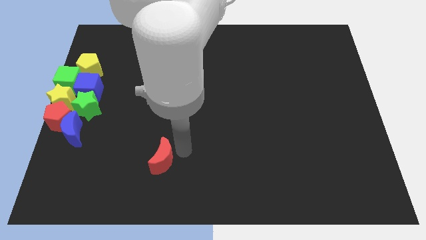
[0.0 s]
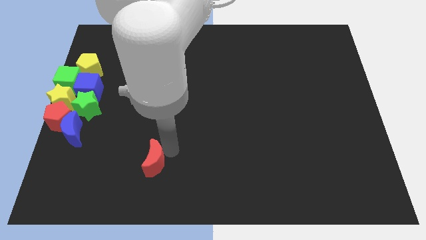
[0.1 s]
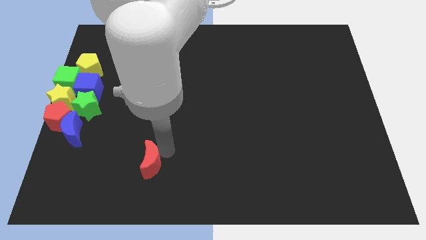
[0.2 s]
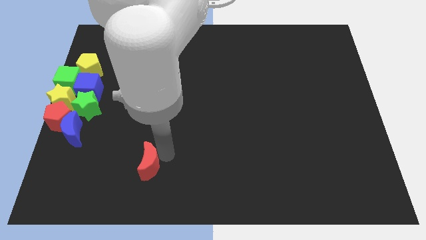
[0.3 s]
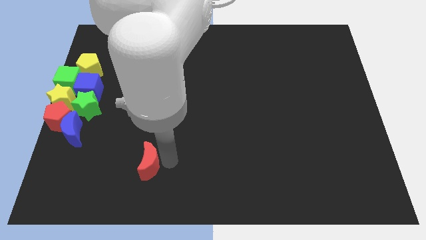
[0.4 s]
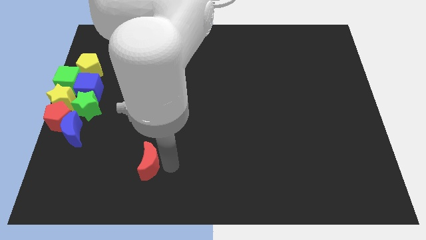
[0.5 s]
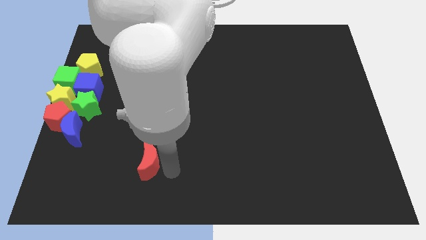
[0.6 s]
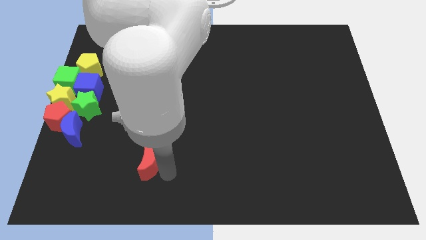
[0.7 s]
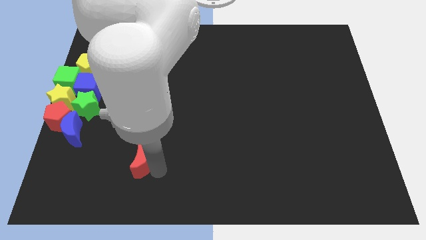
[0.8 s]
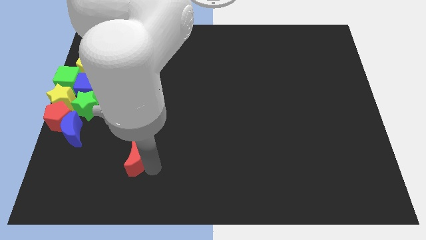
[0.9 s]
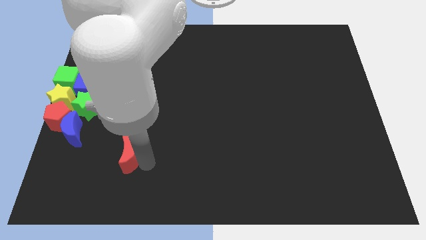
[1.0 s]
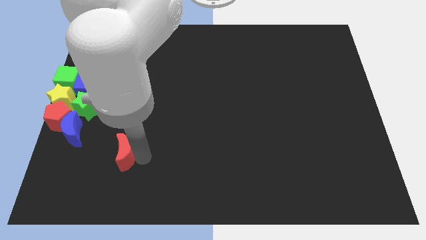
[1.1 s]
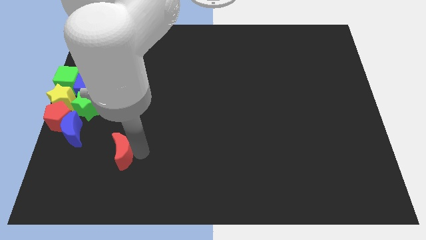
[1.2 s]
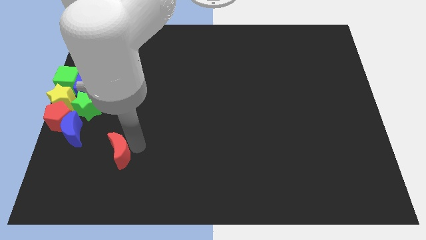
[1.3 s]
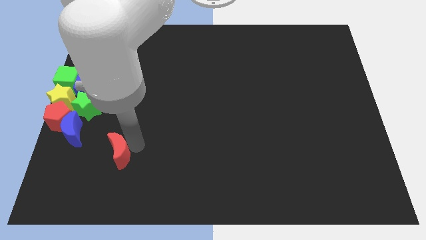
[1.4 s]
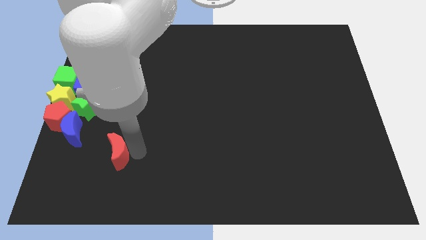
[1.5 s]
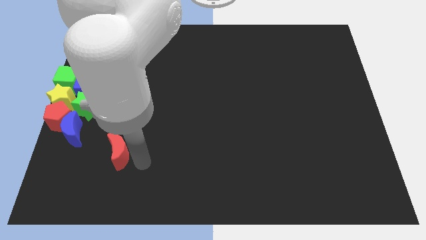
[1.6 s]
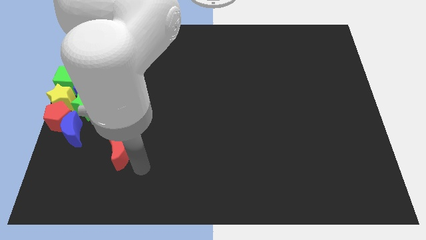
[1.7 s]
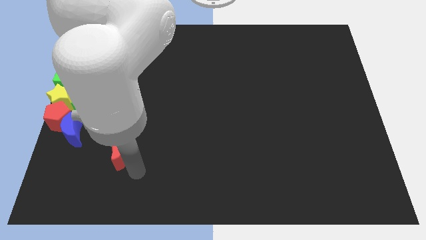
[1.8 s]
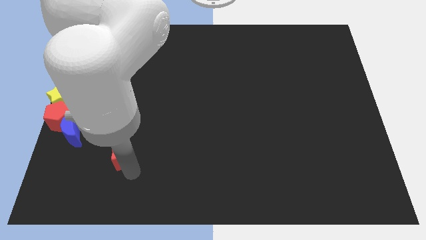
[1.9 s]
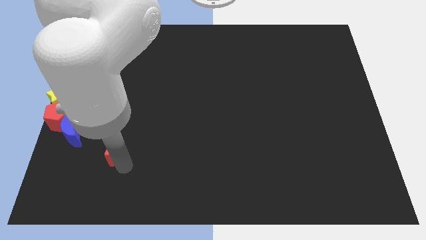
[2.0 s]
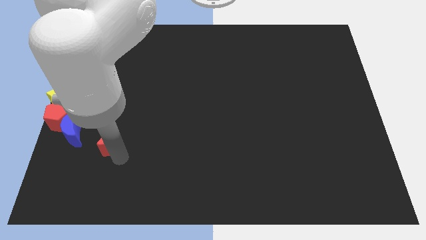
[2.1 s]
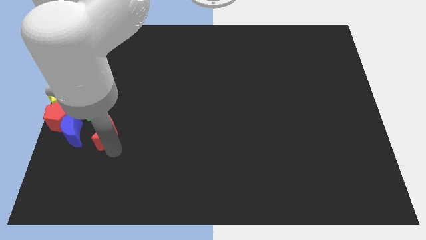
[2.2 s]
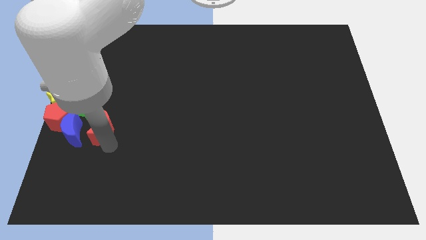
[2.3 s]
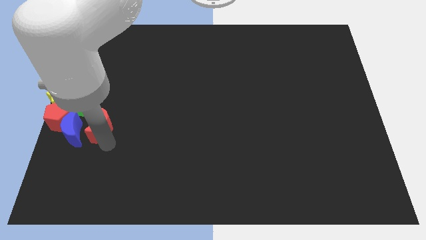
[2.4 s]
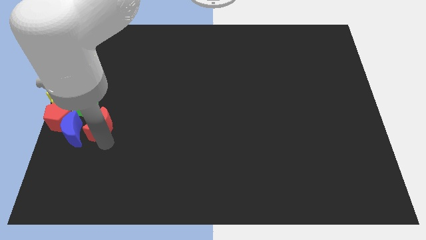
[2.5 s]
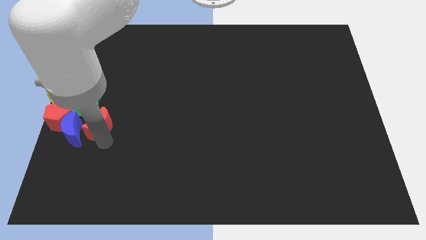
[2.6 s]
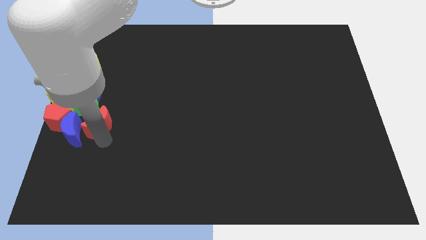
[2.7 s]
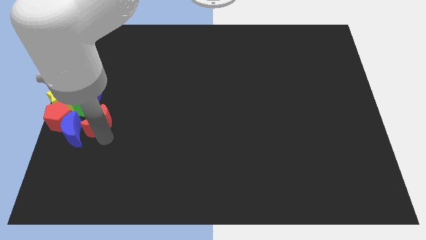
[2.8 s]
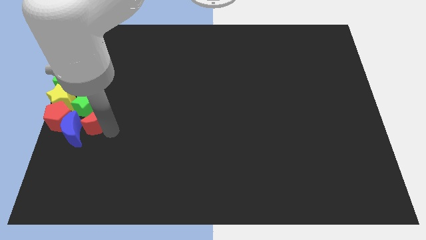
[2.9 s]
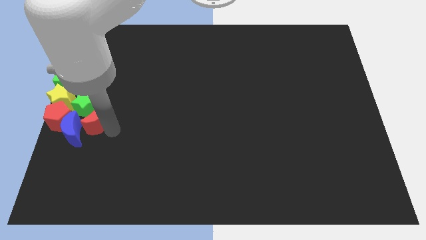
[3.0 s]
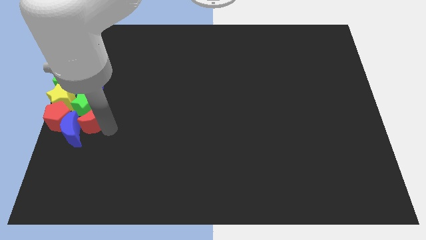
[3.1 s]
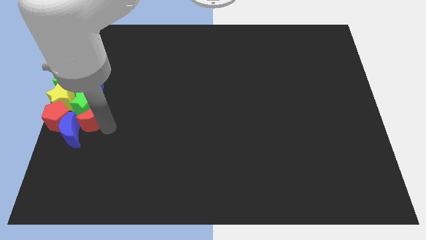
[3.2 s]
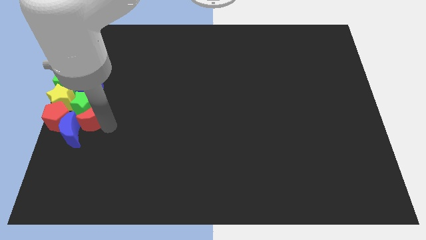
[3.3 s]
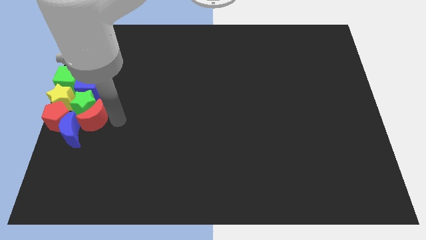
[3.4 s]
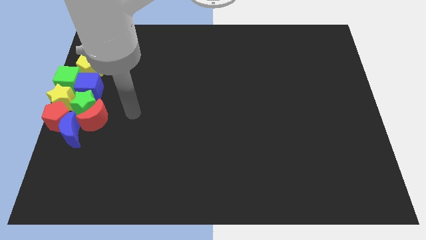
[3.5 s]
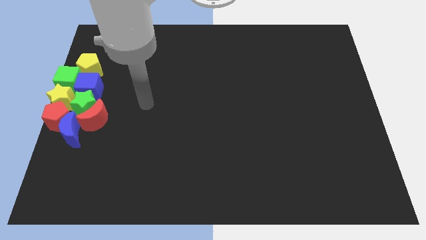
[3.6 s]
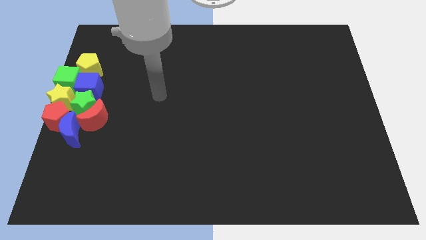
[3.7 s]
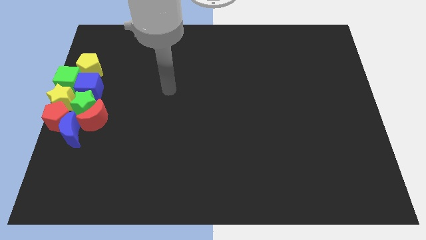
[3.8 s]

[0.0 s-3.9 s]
place the red crescent towards the bottom right side of the green star

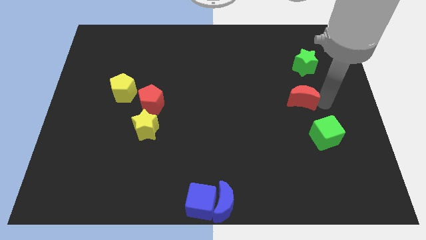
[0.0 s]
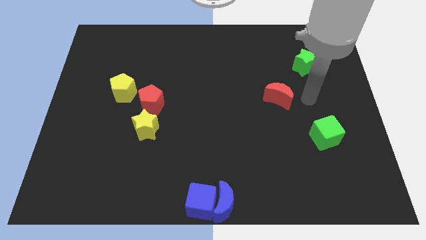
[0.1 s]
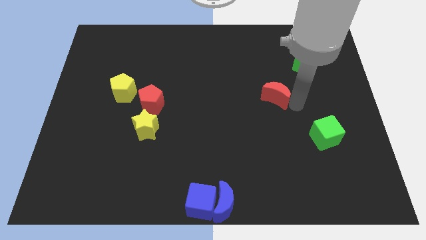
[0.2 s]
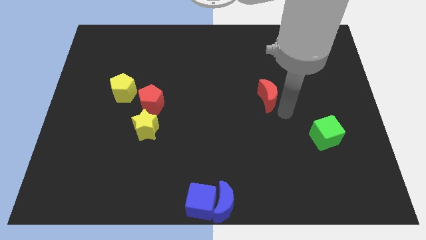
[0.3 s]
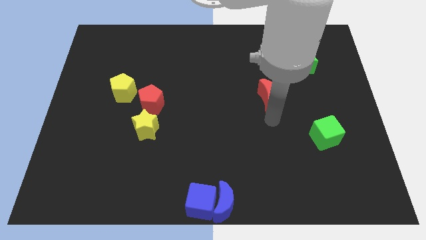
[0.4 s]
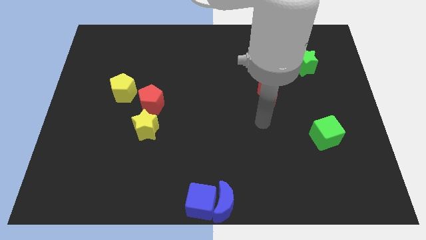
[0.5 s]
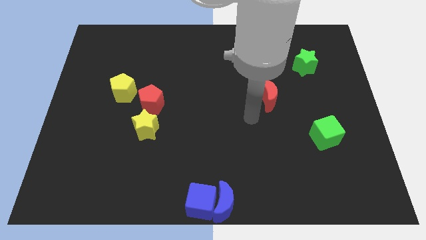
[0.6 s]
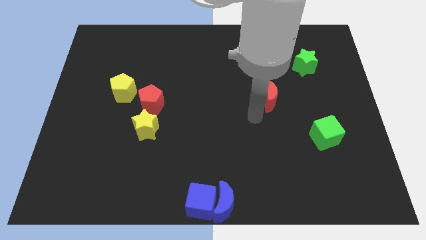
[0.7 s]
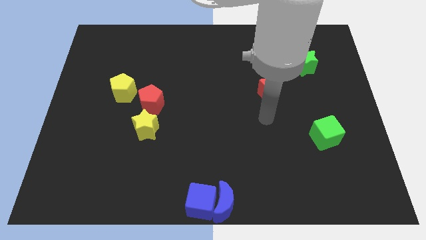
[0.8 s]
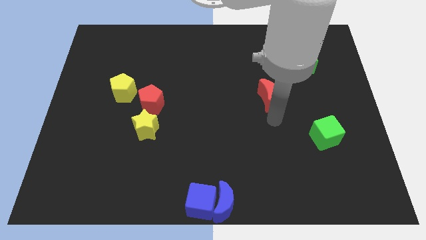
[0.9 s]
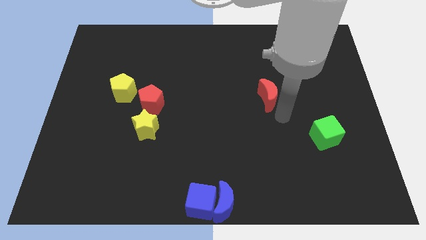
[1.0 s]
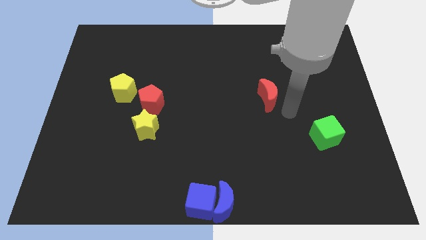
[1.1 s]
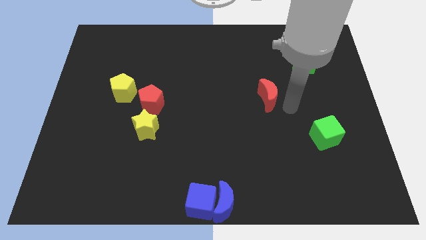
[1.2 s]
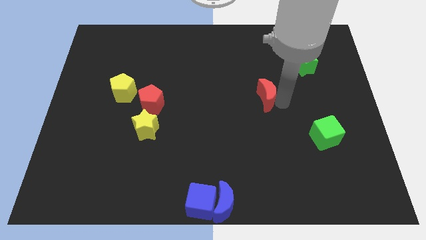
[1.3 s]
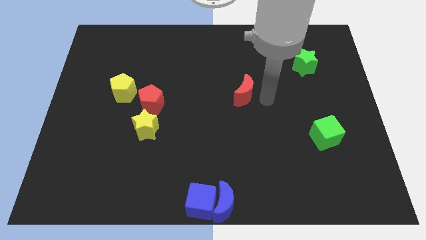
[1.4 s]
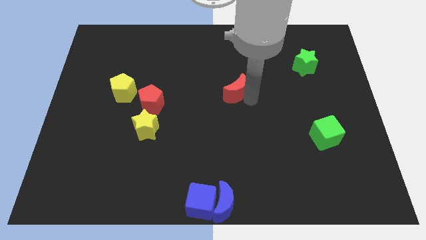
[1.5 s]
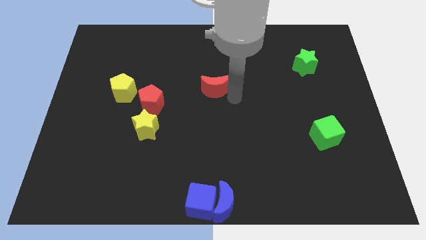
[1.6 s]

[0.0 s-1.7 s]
slide the red moon towards the center of the board

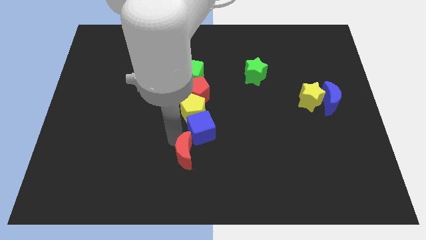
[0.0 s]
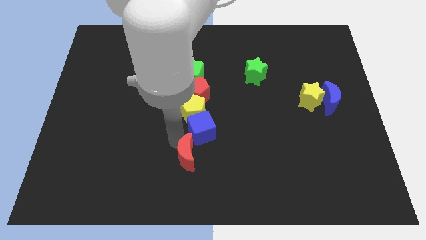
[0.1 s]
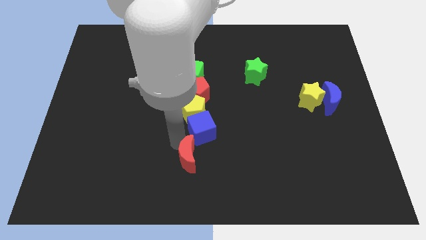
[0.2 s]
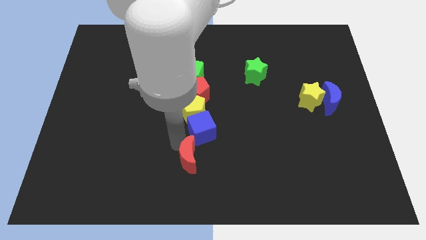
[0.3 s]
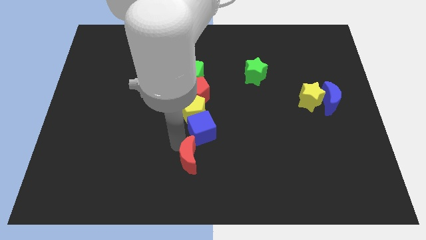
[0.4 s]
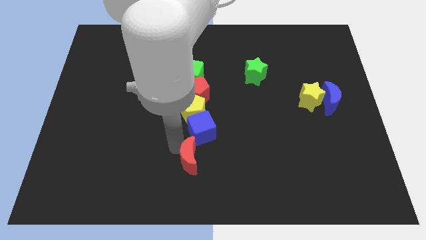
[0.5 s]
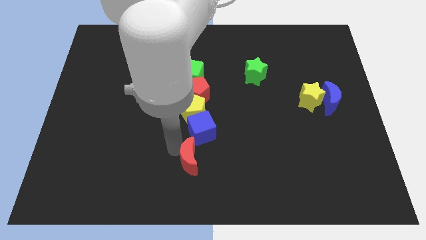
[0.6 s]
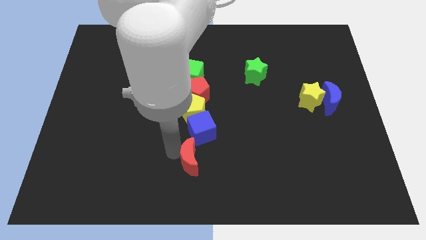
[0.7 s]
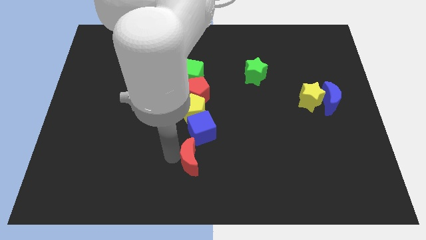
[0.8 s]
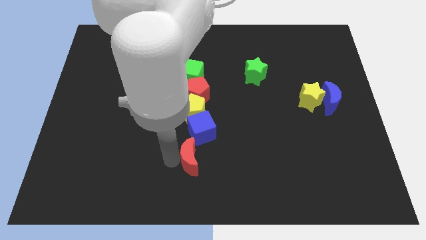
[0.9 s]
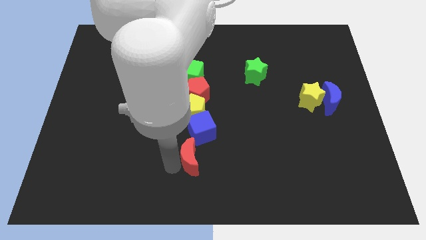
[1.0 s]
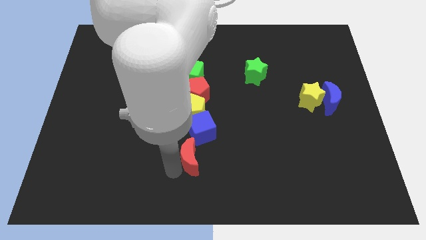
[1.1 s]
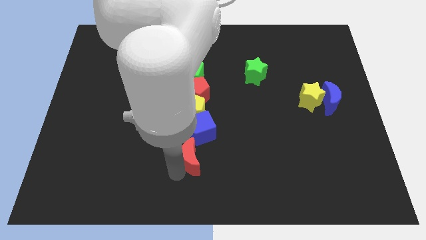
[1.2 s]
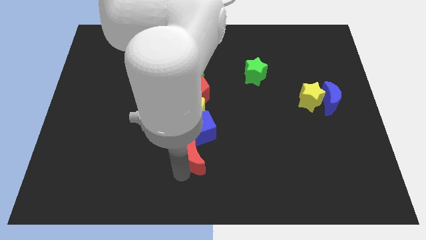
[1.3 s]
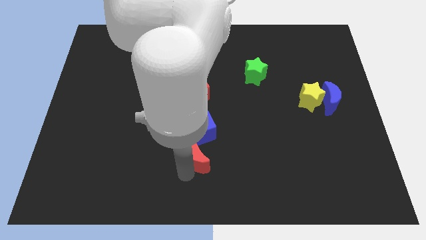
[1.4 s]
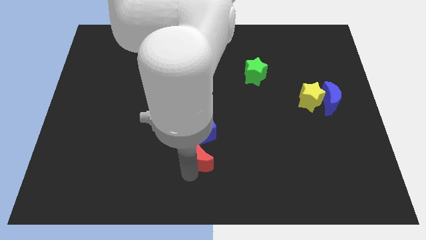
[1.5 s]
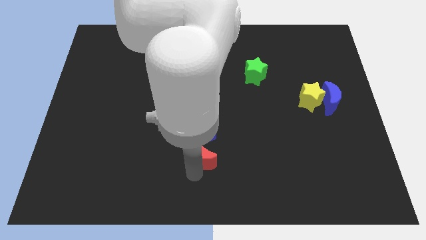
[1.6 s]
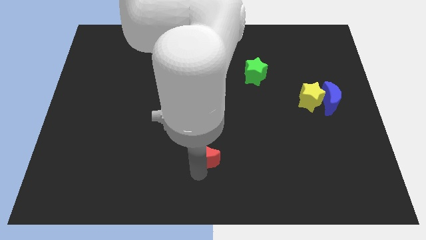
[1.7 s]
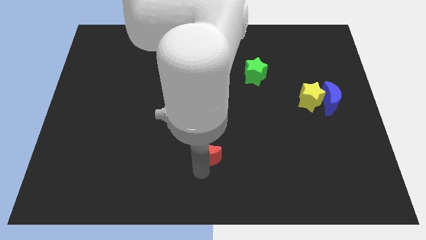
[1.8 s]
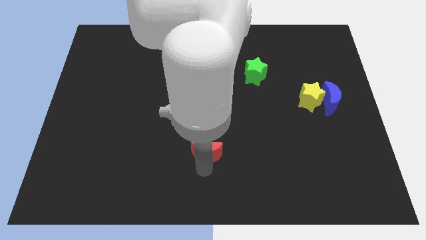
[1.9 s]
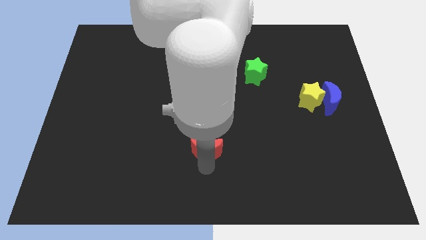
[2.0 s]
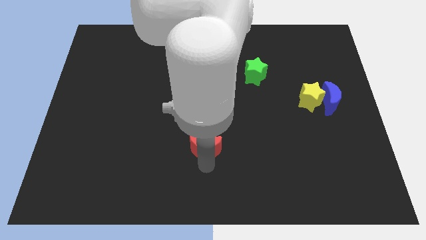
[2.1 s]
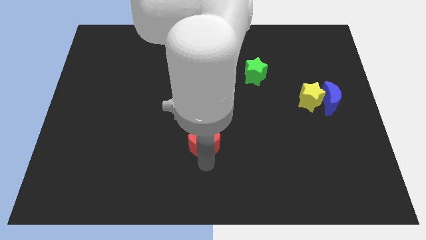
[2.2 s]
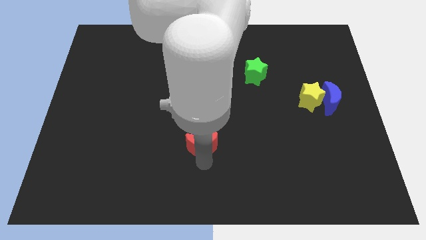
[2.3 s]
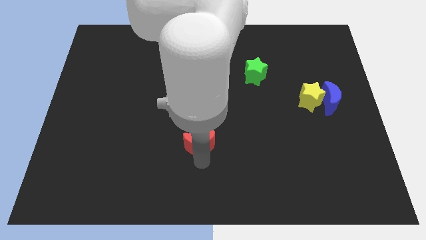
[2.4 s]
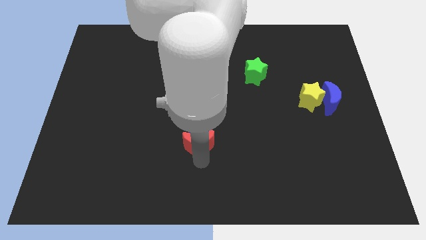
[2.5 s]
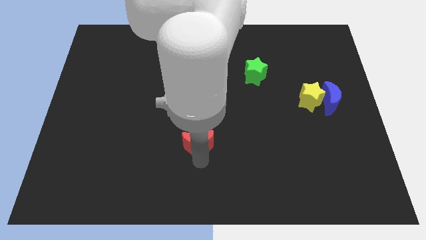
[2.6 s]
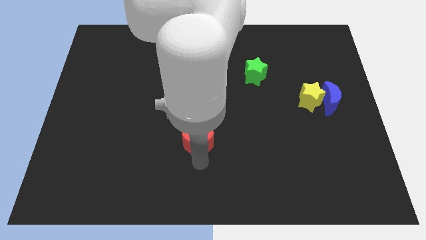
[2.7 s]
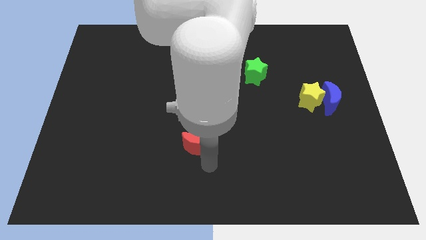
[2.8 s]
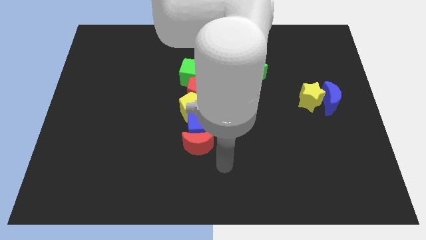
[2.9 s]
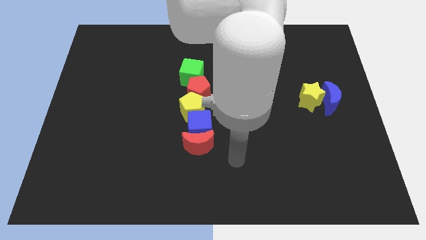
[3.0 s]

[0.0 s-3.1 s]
move the red moon into the blue cube

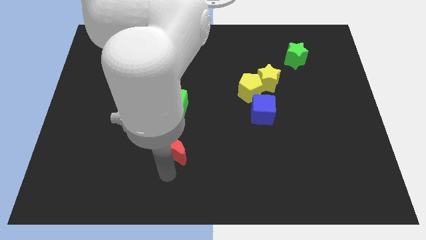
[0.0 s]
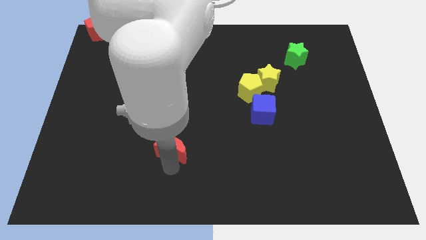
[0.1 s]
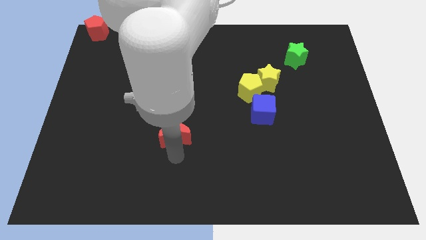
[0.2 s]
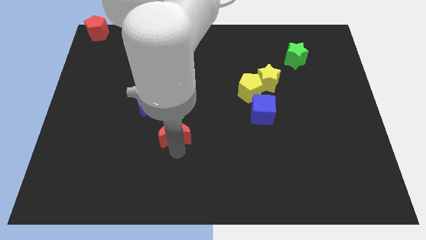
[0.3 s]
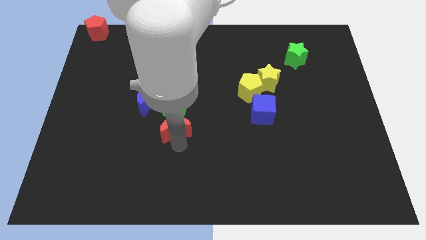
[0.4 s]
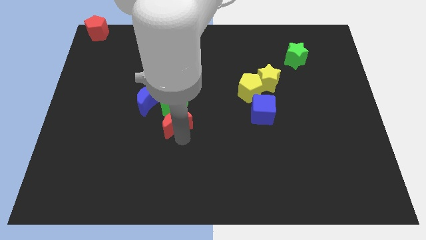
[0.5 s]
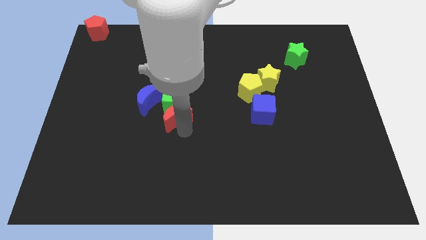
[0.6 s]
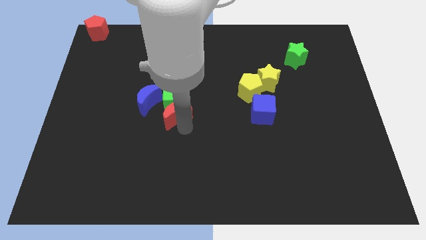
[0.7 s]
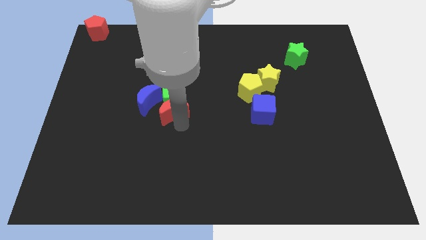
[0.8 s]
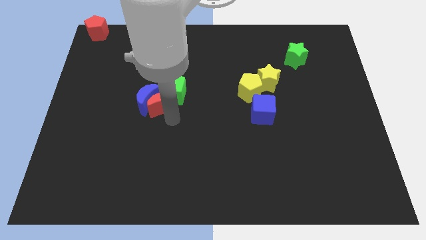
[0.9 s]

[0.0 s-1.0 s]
push the red crescent below the green cube
